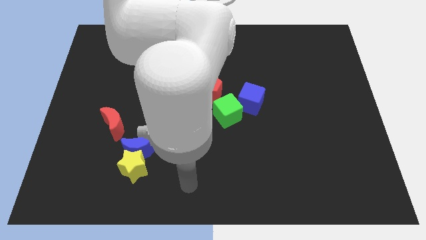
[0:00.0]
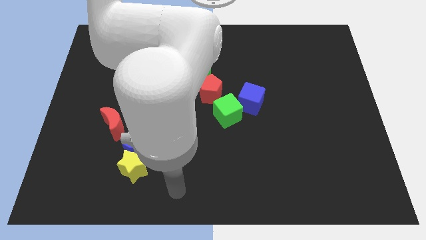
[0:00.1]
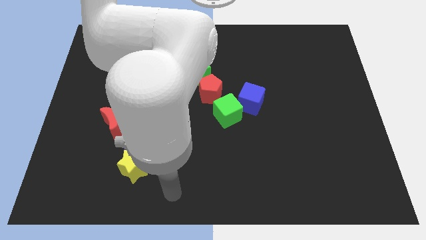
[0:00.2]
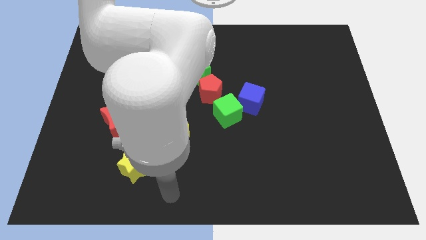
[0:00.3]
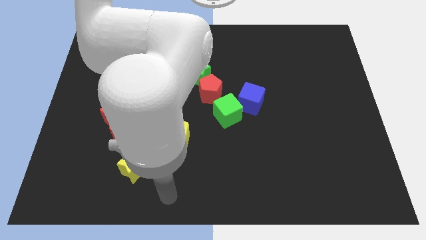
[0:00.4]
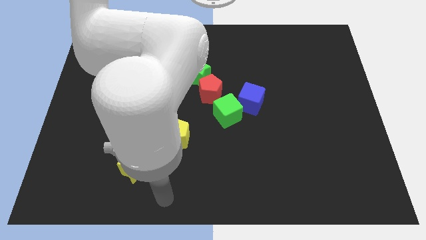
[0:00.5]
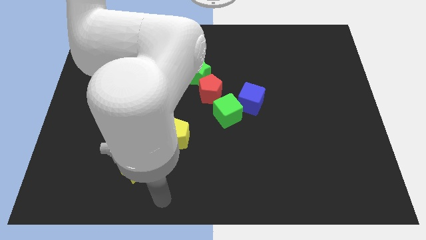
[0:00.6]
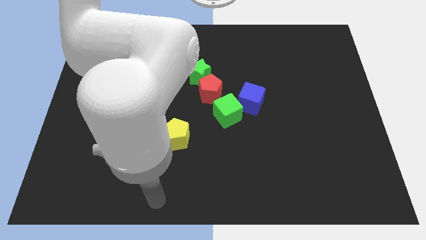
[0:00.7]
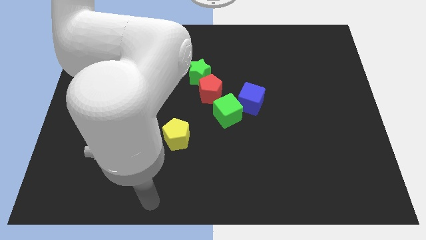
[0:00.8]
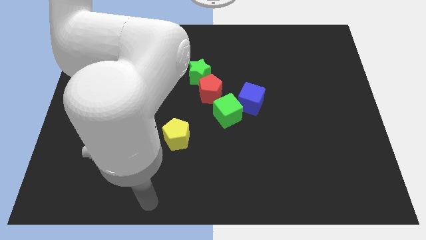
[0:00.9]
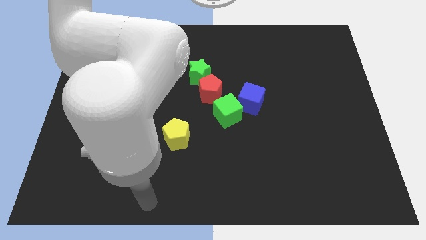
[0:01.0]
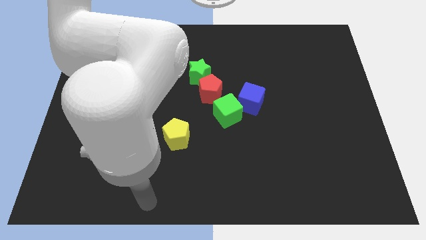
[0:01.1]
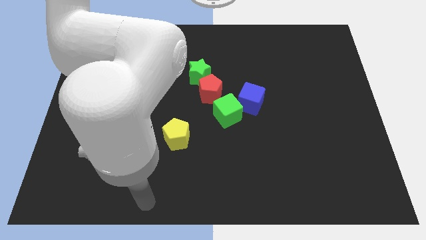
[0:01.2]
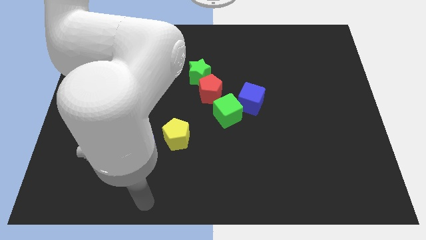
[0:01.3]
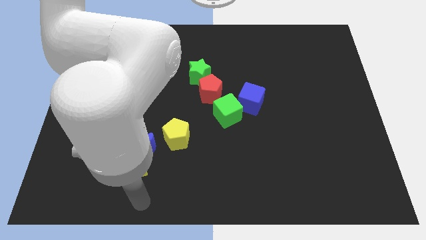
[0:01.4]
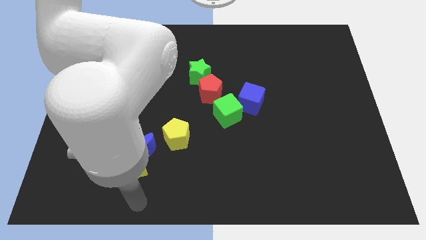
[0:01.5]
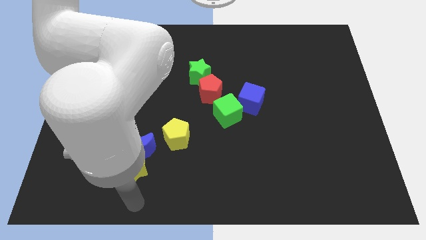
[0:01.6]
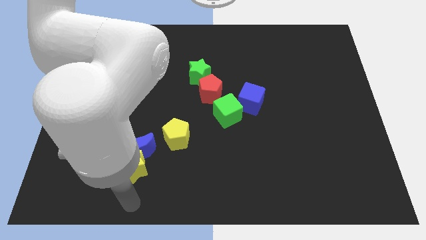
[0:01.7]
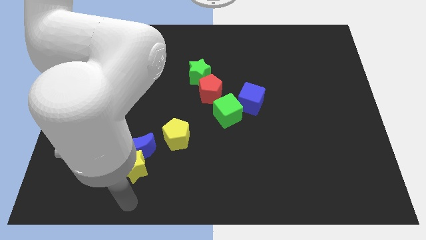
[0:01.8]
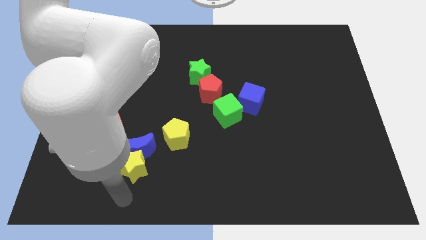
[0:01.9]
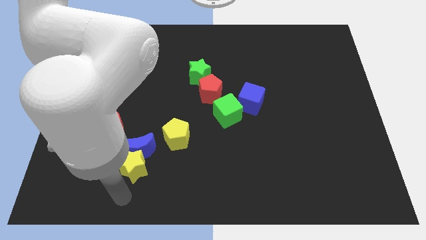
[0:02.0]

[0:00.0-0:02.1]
move your arm to the bottom of yellow star

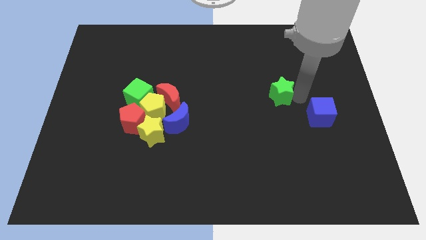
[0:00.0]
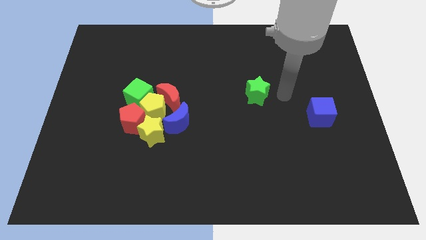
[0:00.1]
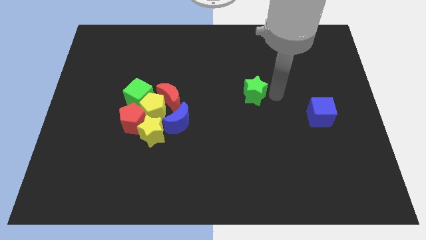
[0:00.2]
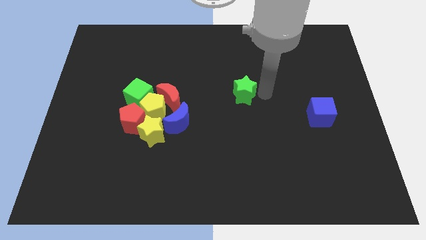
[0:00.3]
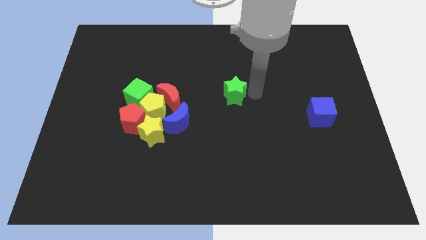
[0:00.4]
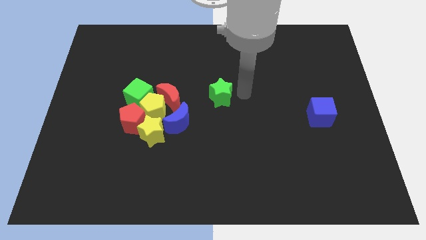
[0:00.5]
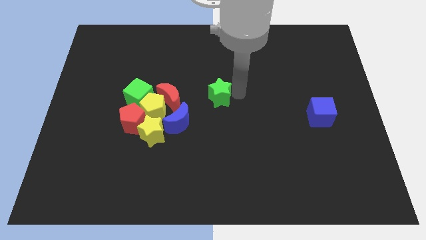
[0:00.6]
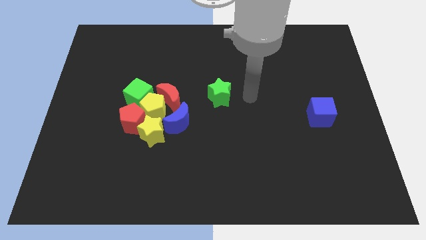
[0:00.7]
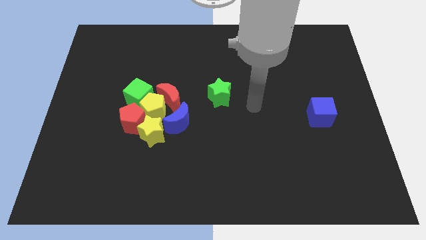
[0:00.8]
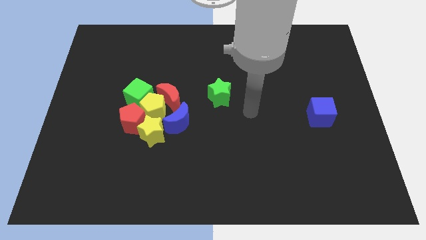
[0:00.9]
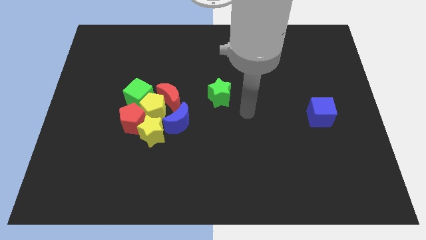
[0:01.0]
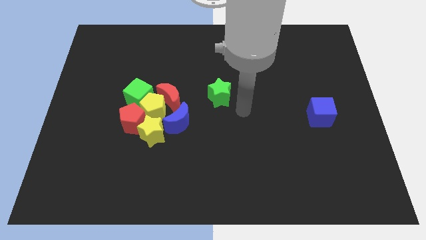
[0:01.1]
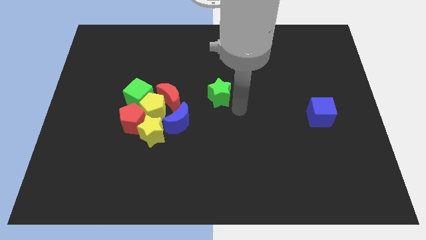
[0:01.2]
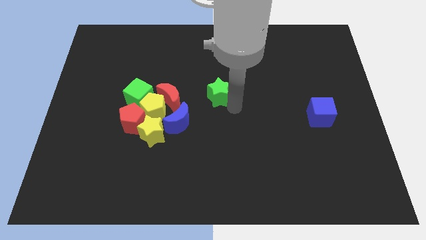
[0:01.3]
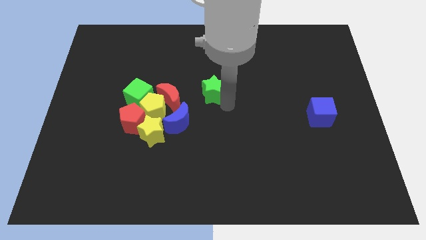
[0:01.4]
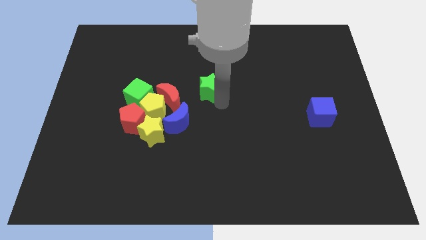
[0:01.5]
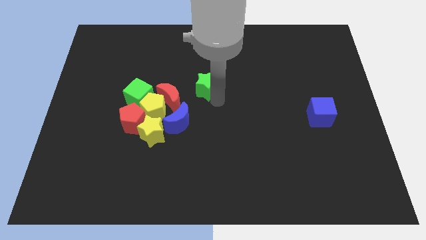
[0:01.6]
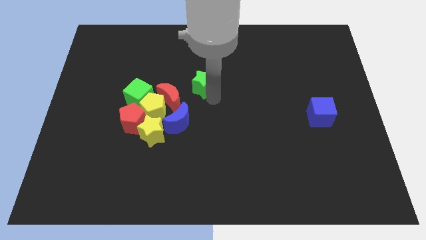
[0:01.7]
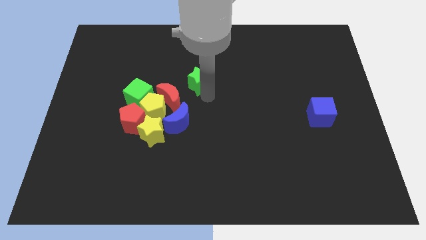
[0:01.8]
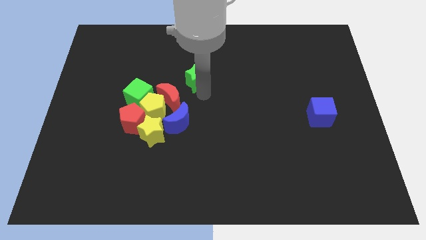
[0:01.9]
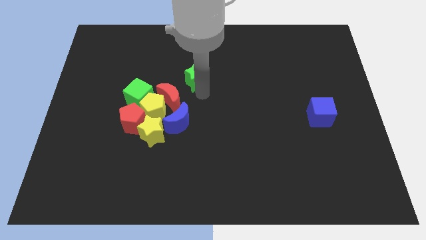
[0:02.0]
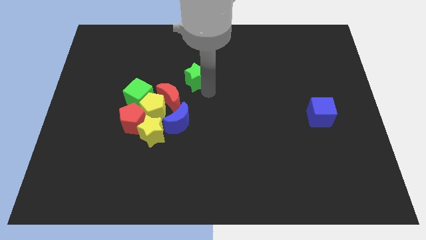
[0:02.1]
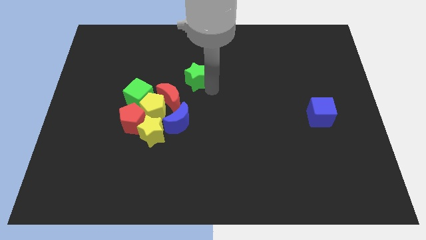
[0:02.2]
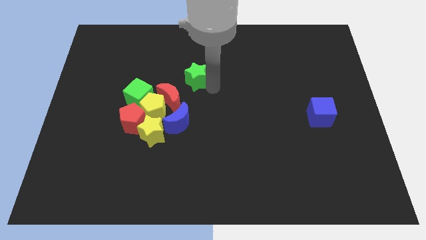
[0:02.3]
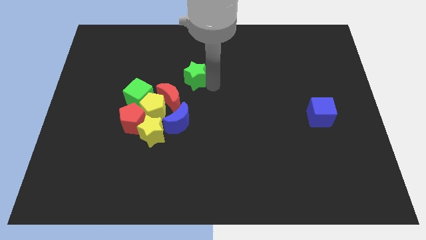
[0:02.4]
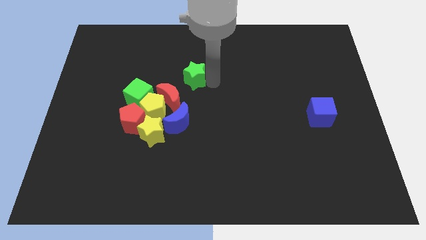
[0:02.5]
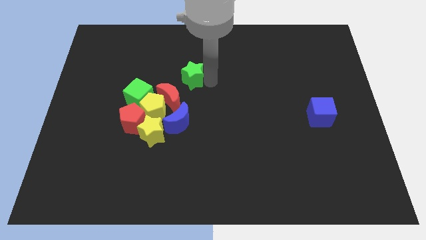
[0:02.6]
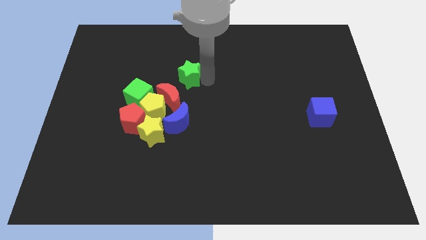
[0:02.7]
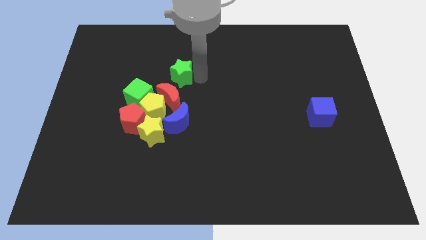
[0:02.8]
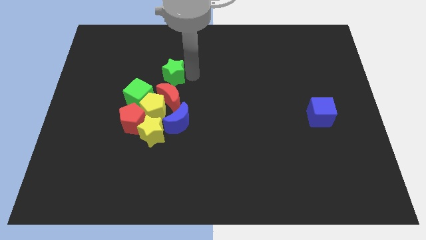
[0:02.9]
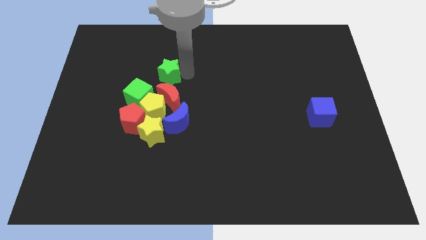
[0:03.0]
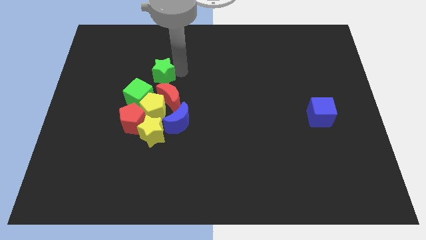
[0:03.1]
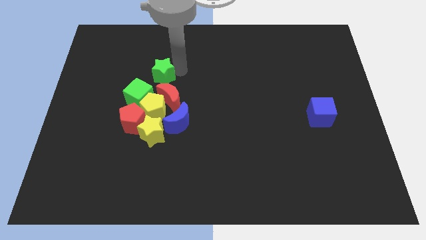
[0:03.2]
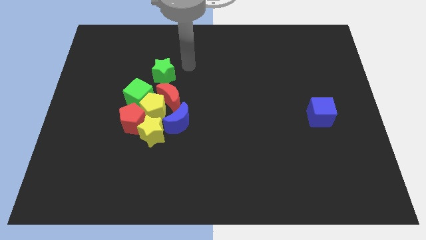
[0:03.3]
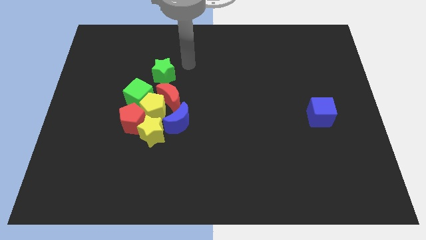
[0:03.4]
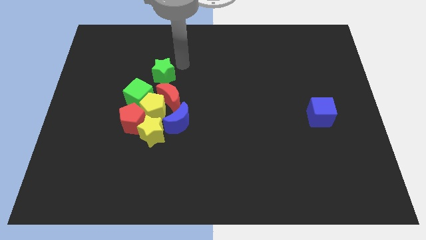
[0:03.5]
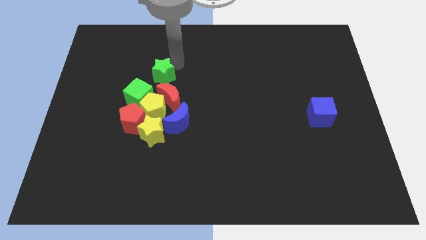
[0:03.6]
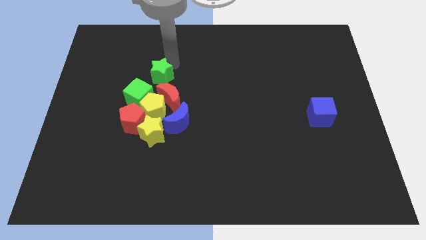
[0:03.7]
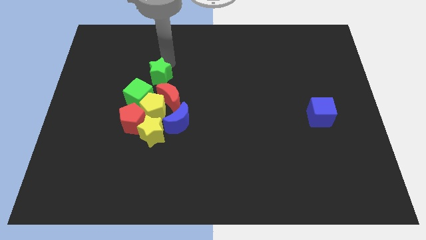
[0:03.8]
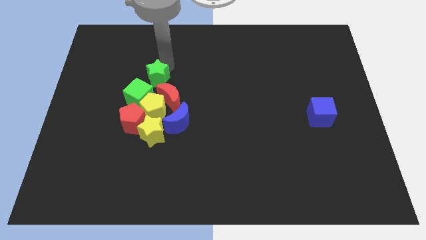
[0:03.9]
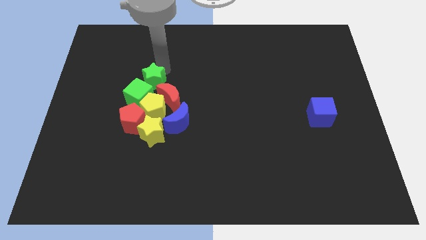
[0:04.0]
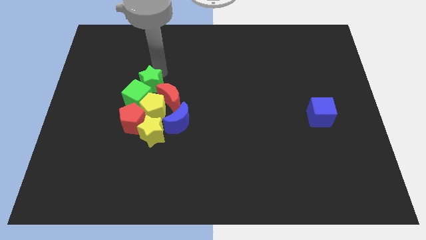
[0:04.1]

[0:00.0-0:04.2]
push the green star into the green cube

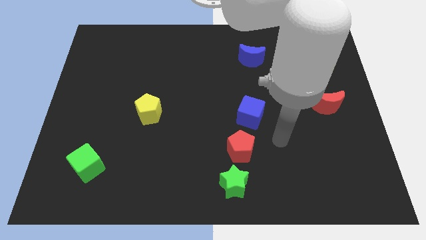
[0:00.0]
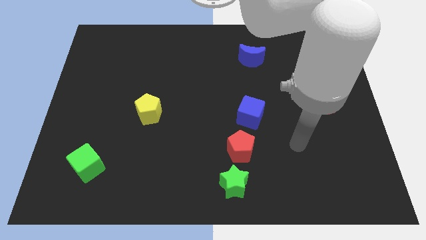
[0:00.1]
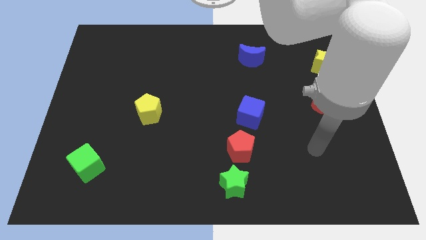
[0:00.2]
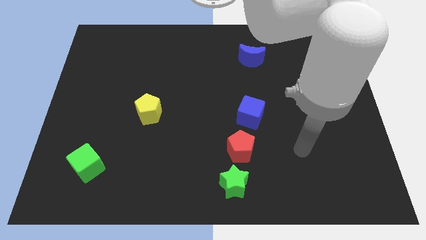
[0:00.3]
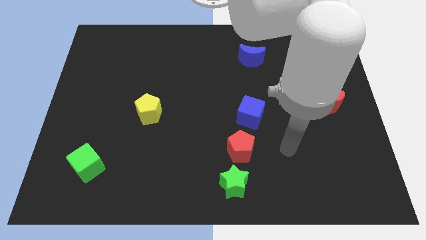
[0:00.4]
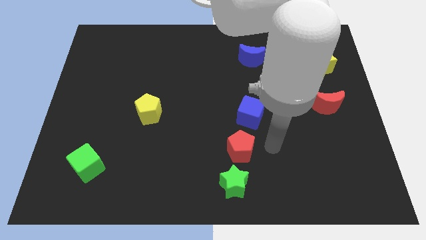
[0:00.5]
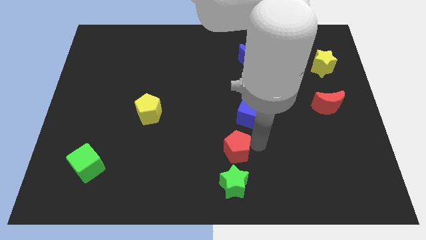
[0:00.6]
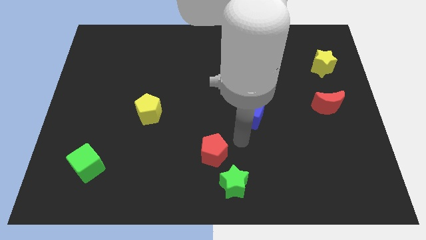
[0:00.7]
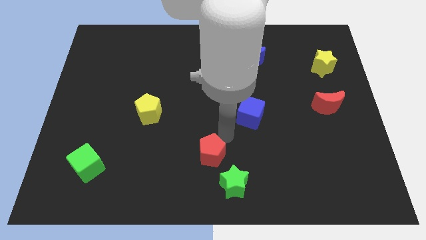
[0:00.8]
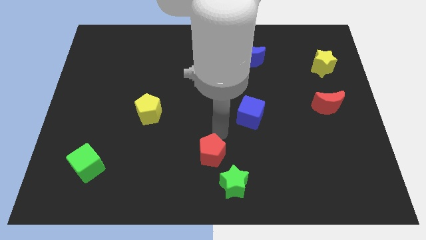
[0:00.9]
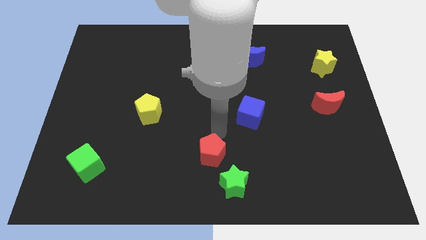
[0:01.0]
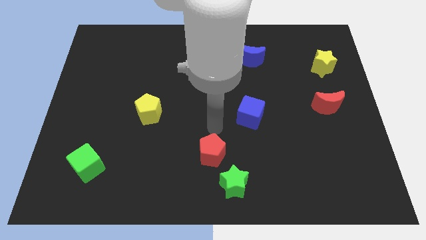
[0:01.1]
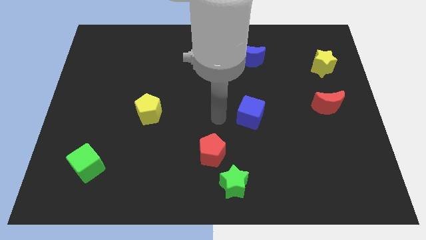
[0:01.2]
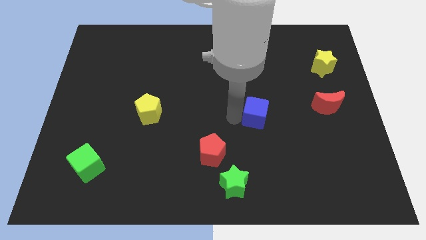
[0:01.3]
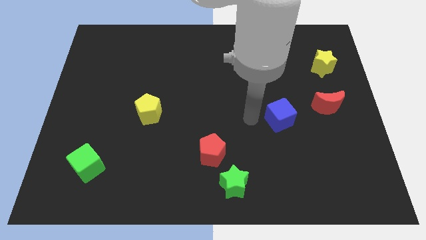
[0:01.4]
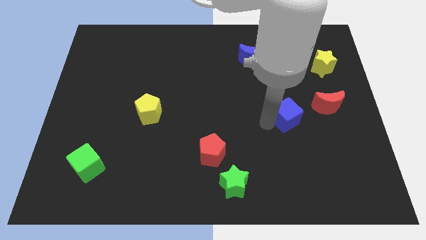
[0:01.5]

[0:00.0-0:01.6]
separate the red pentagon and blue cube

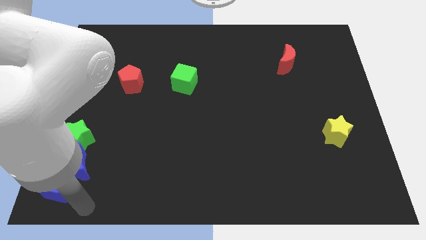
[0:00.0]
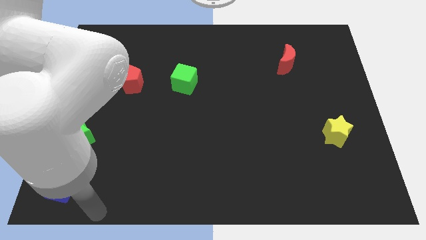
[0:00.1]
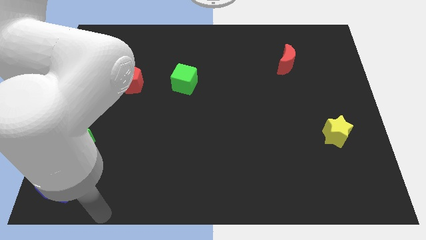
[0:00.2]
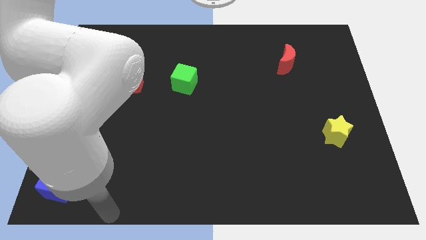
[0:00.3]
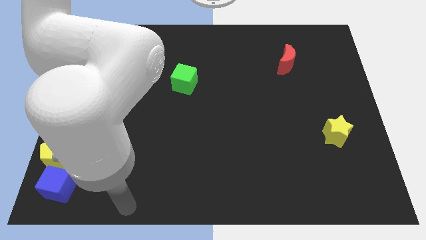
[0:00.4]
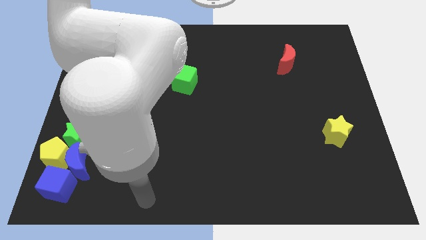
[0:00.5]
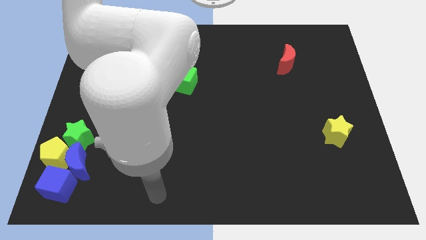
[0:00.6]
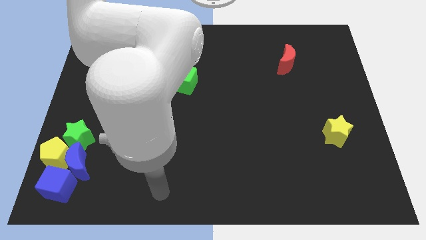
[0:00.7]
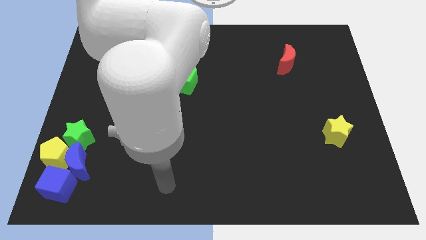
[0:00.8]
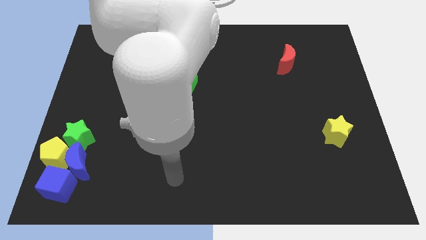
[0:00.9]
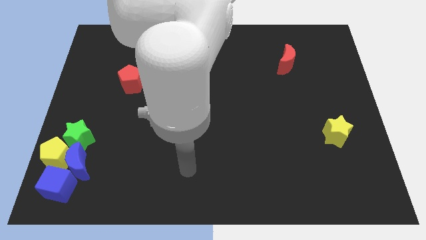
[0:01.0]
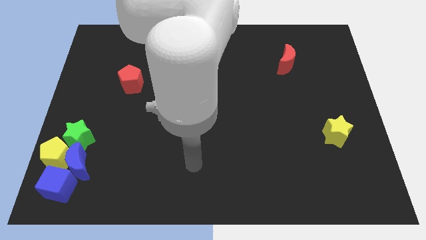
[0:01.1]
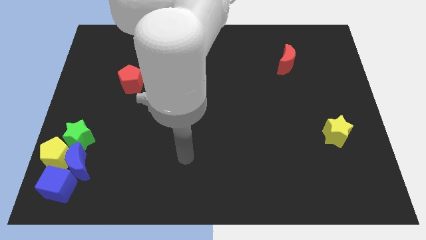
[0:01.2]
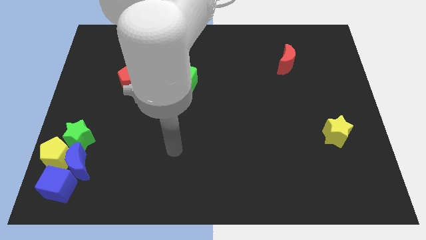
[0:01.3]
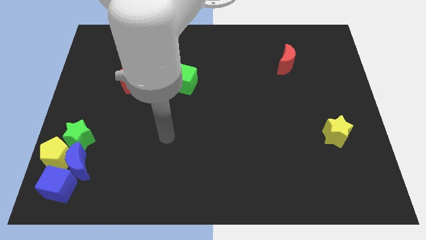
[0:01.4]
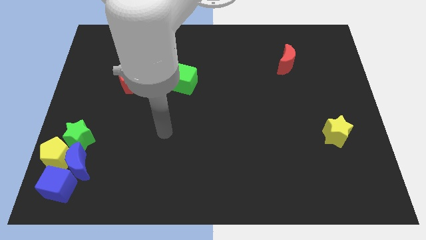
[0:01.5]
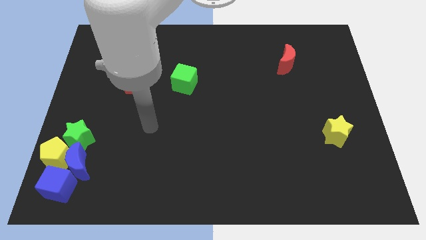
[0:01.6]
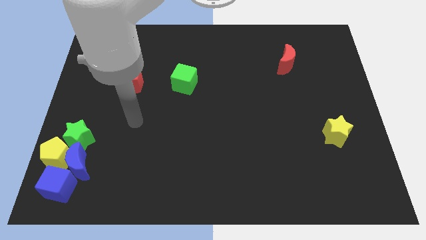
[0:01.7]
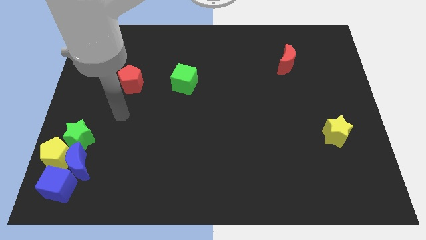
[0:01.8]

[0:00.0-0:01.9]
move the arm from left bottom to below the red pentagon
